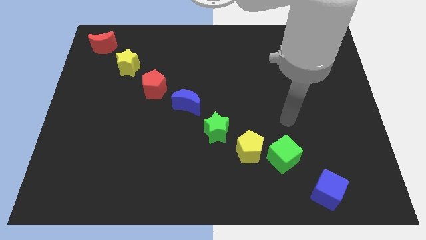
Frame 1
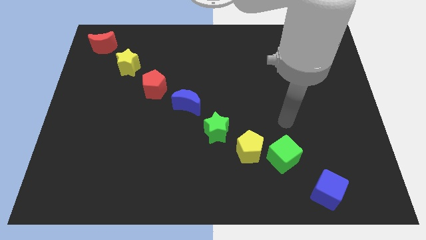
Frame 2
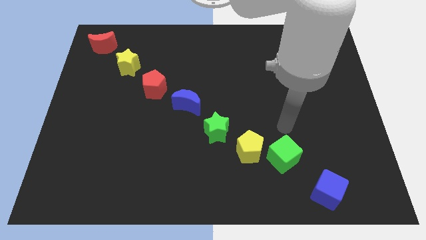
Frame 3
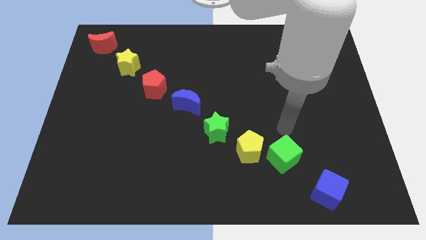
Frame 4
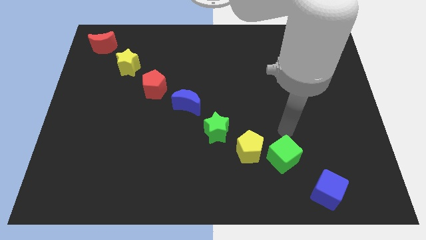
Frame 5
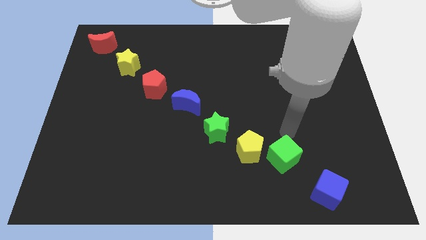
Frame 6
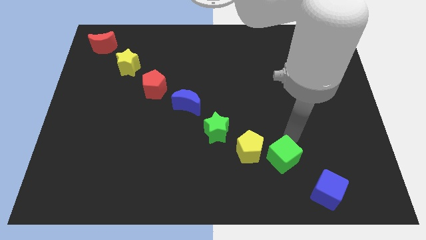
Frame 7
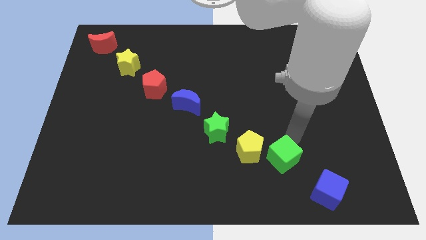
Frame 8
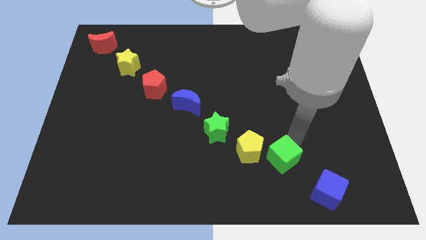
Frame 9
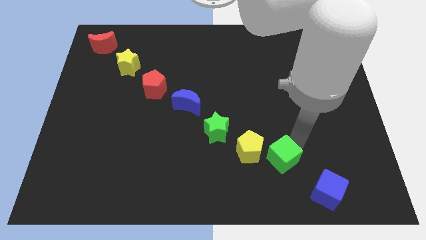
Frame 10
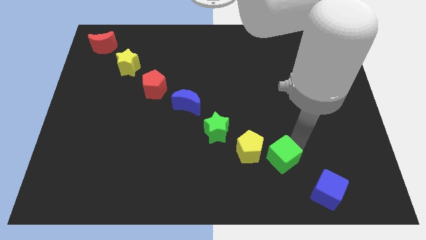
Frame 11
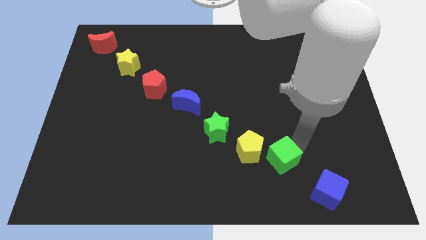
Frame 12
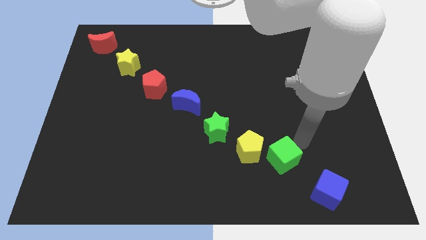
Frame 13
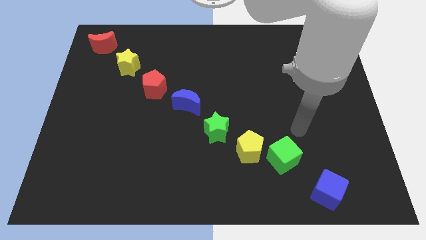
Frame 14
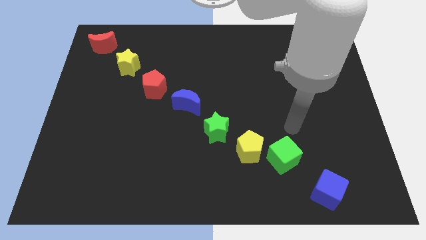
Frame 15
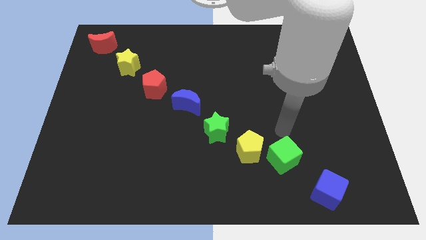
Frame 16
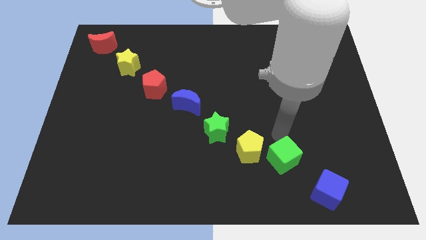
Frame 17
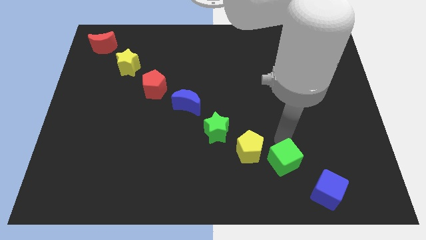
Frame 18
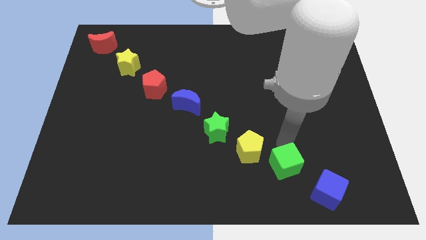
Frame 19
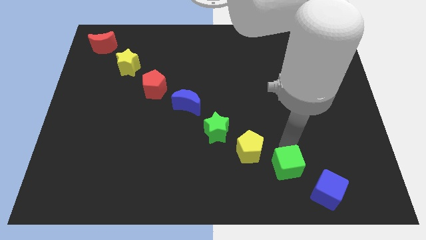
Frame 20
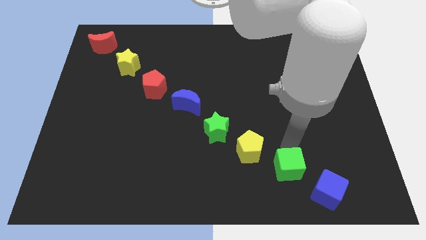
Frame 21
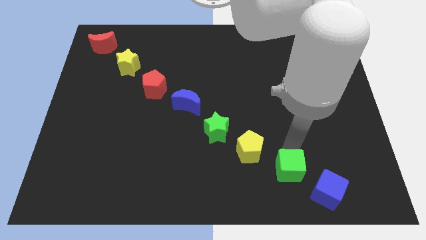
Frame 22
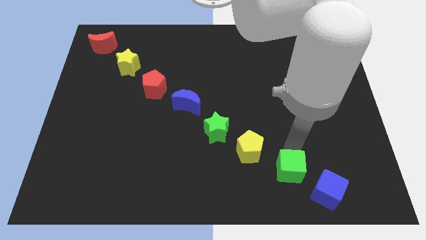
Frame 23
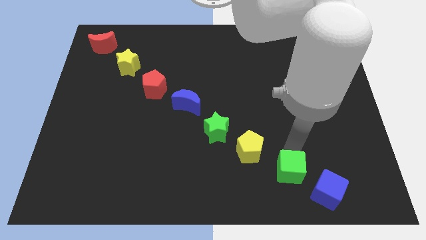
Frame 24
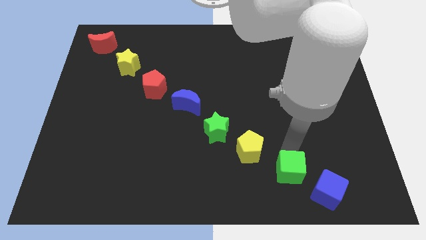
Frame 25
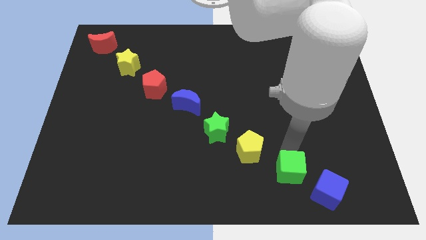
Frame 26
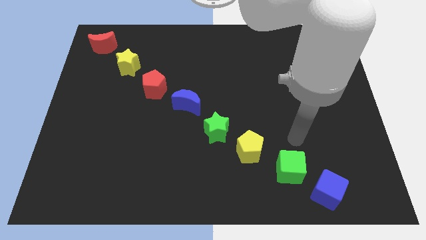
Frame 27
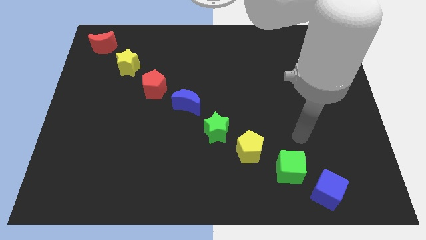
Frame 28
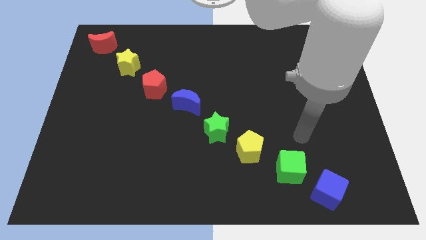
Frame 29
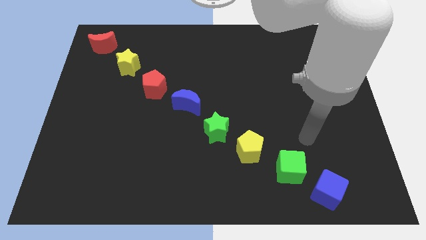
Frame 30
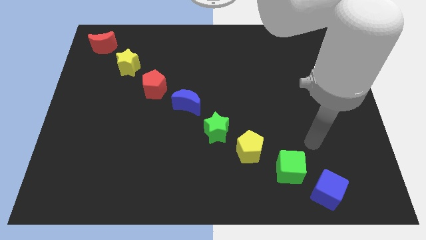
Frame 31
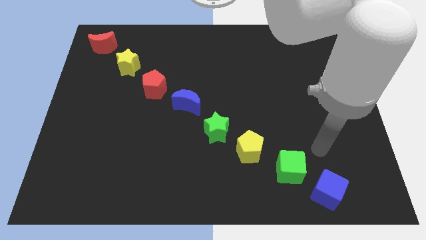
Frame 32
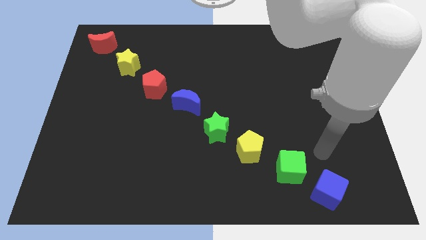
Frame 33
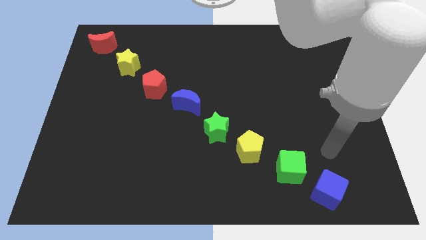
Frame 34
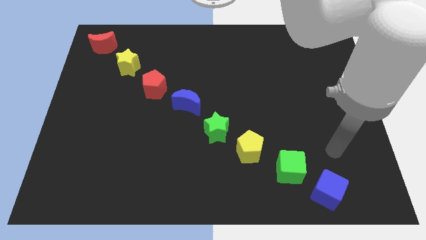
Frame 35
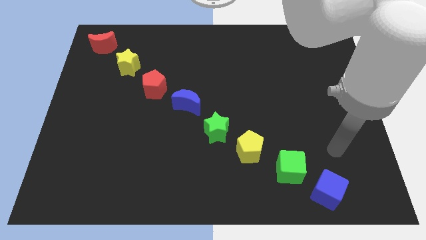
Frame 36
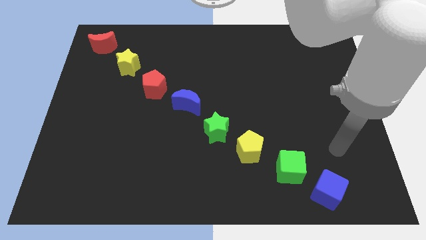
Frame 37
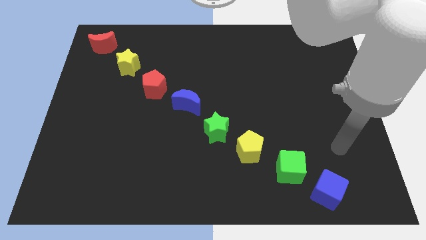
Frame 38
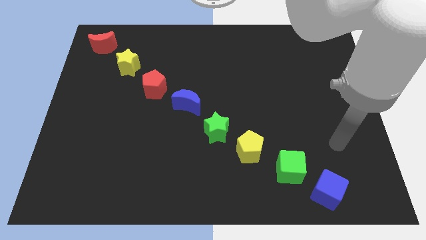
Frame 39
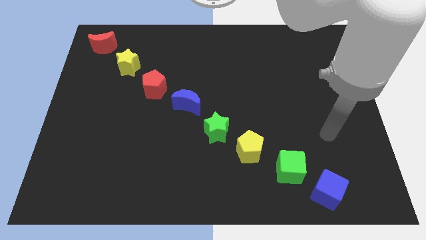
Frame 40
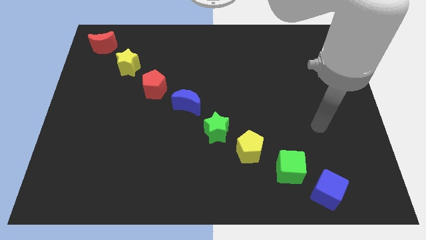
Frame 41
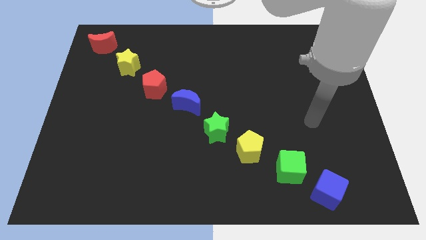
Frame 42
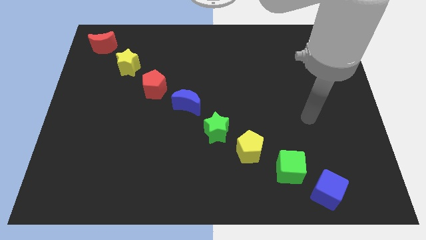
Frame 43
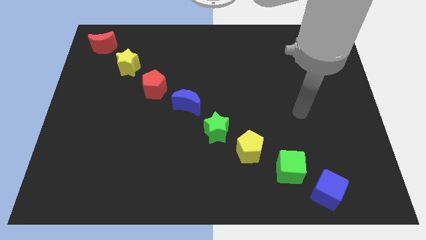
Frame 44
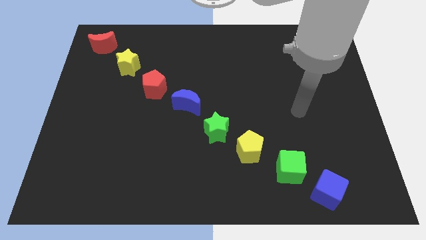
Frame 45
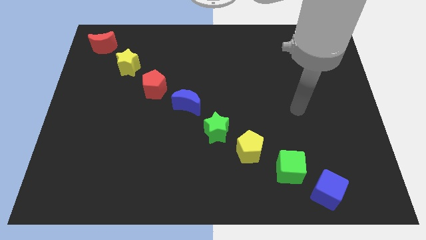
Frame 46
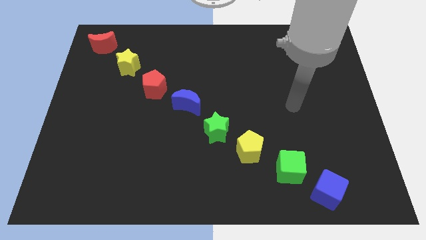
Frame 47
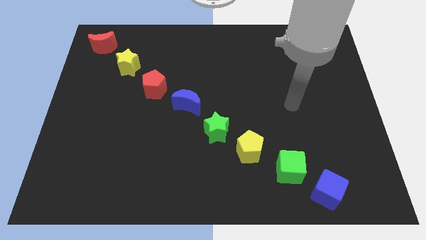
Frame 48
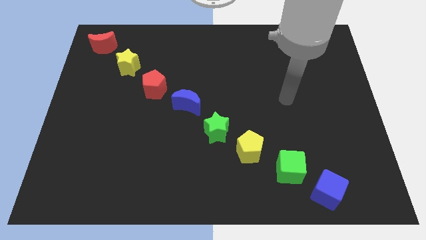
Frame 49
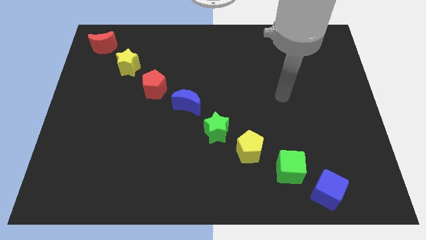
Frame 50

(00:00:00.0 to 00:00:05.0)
place the green cube in between the blue cube and the yellow pentagon

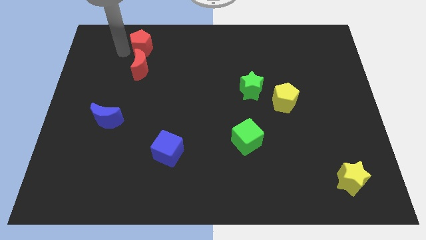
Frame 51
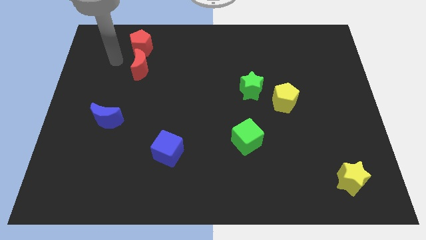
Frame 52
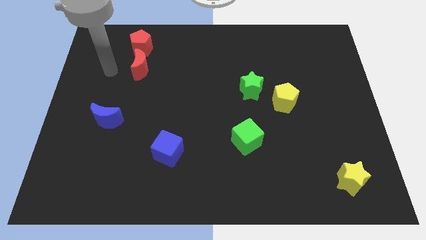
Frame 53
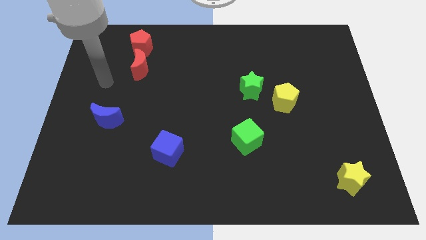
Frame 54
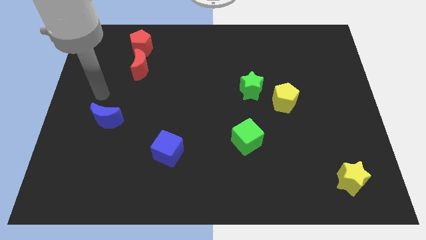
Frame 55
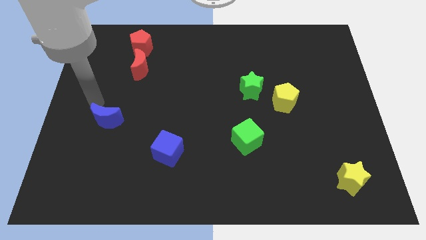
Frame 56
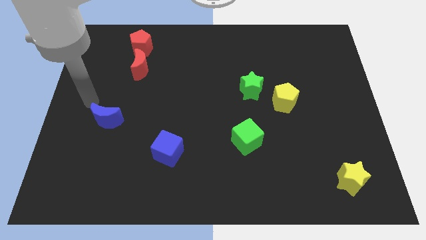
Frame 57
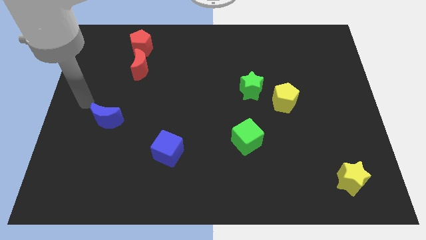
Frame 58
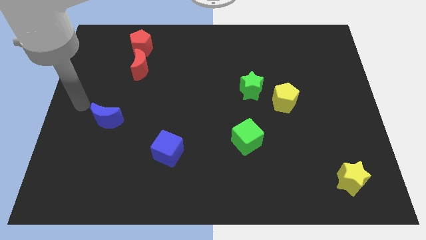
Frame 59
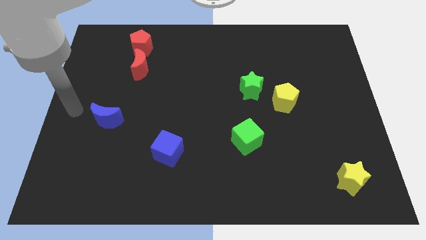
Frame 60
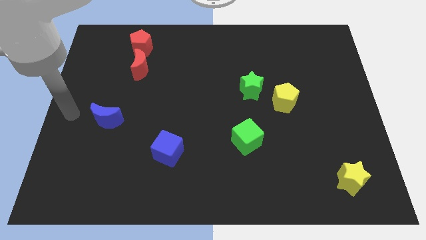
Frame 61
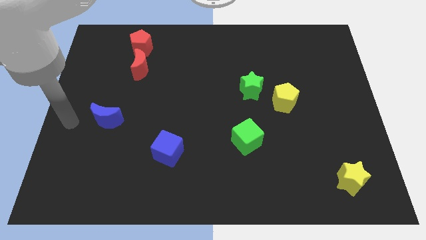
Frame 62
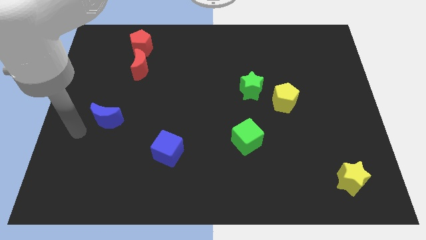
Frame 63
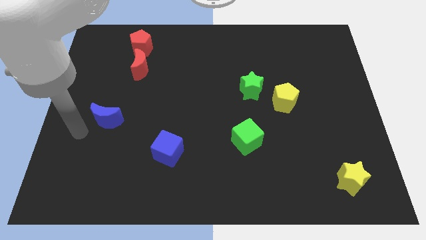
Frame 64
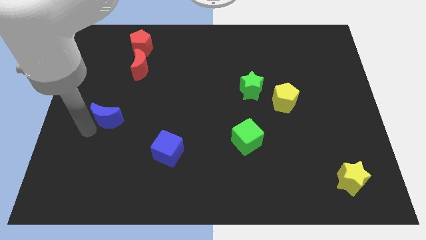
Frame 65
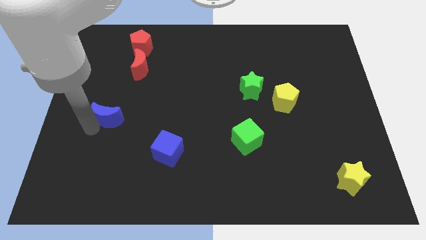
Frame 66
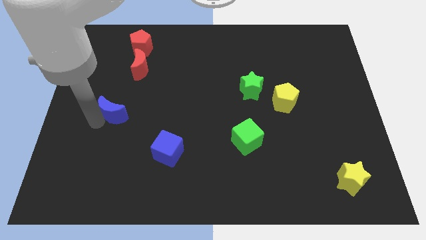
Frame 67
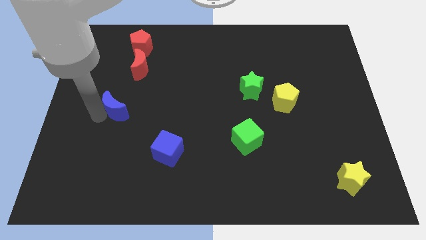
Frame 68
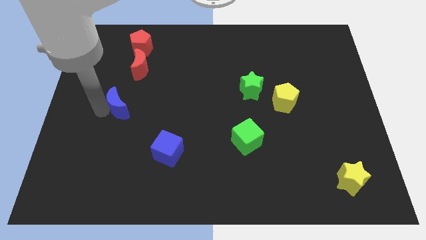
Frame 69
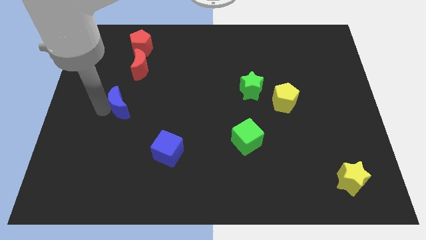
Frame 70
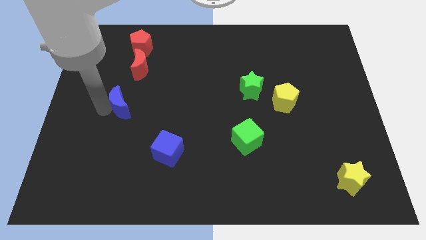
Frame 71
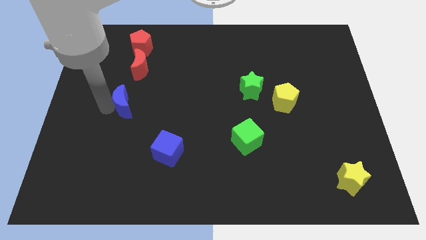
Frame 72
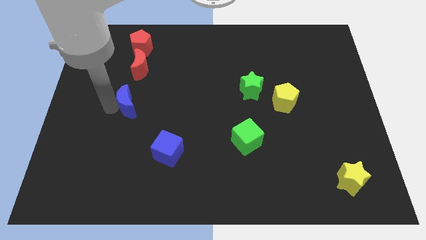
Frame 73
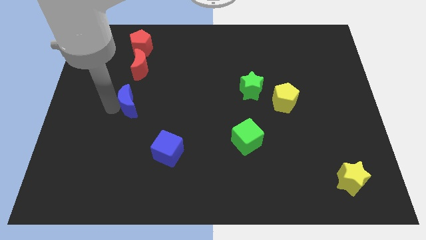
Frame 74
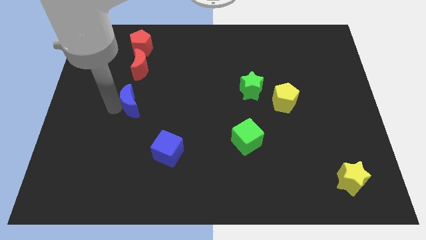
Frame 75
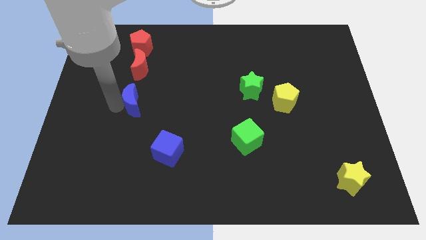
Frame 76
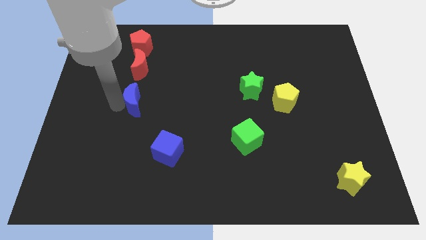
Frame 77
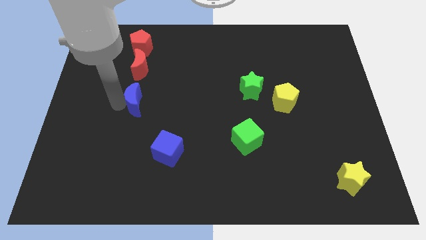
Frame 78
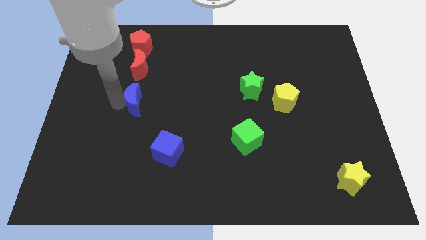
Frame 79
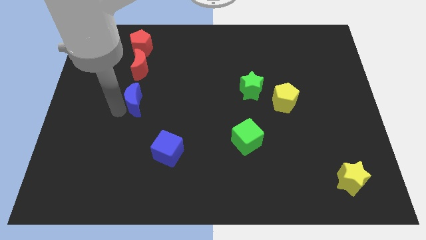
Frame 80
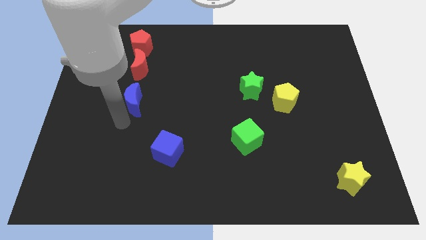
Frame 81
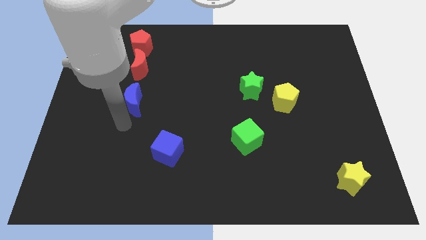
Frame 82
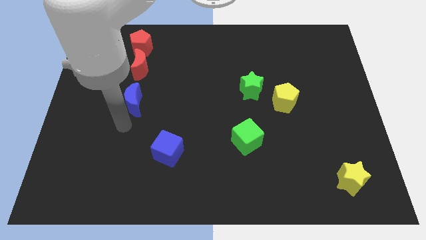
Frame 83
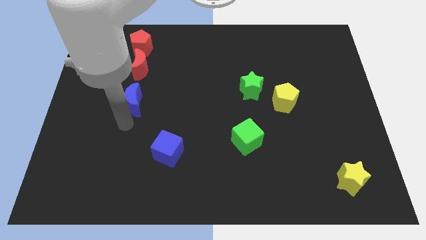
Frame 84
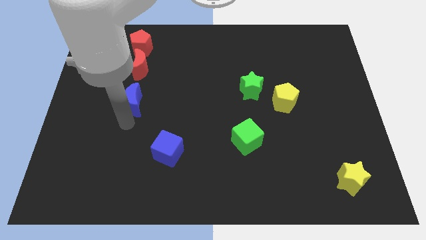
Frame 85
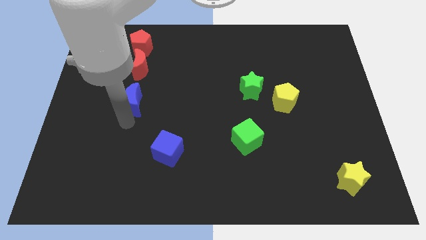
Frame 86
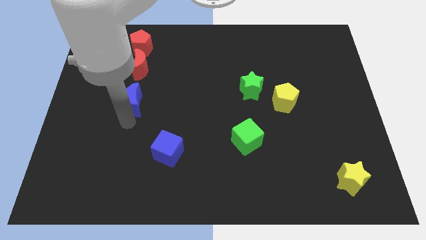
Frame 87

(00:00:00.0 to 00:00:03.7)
push the blue moon below the red moon

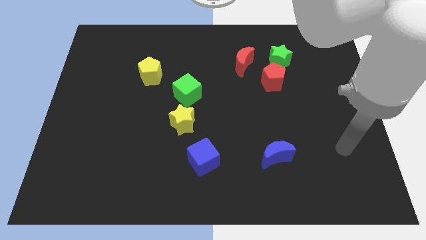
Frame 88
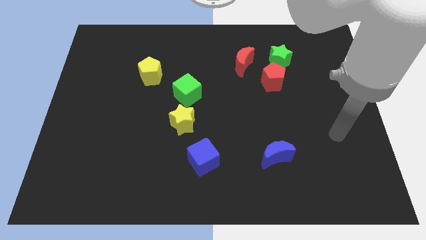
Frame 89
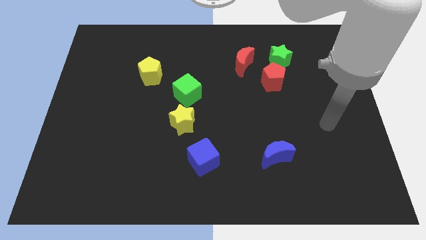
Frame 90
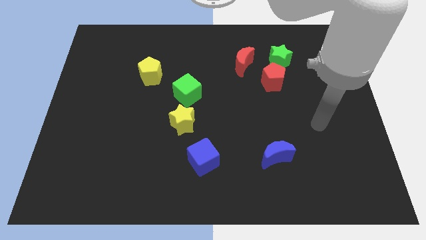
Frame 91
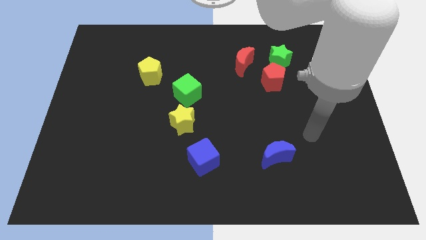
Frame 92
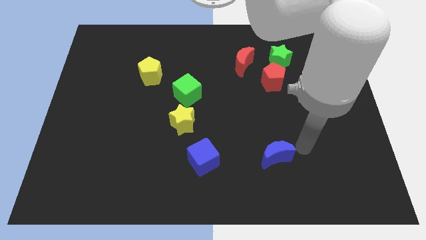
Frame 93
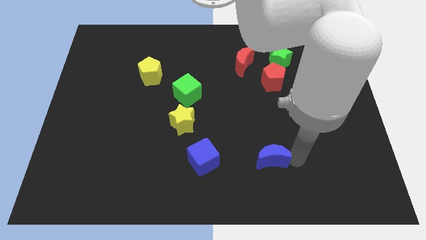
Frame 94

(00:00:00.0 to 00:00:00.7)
touch the blue moon
